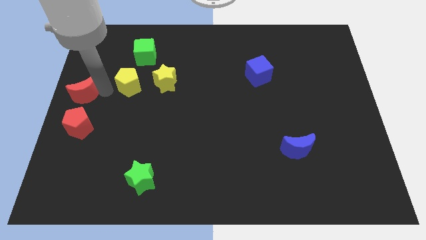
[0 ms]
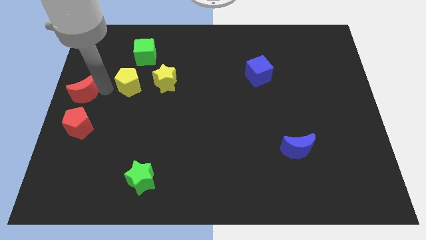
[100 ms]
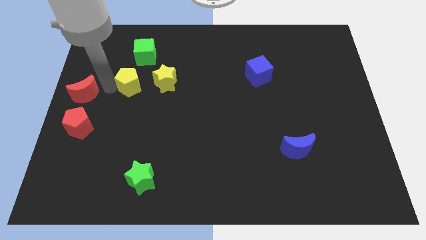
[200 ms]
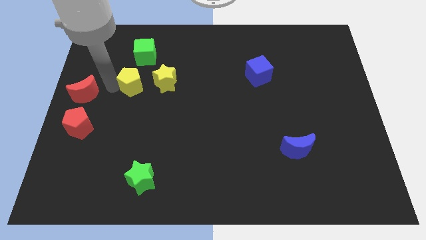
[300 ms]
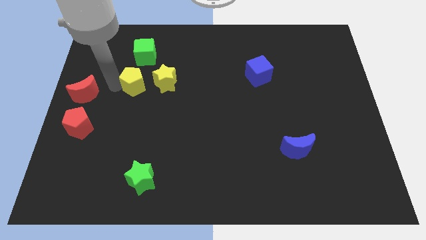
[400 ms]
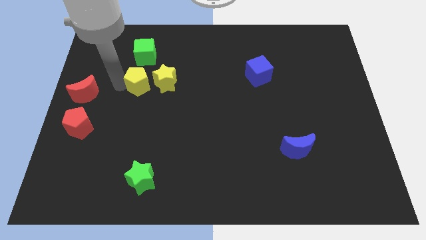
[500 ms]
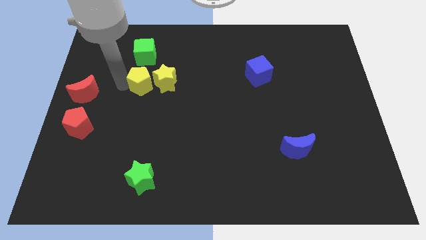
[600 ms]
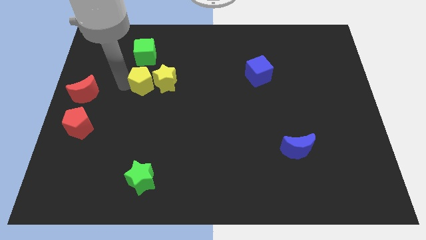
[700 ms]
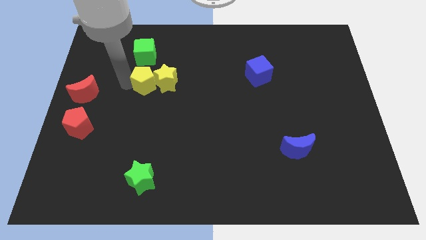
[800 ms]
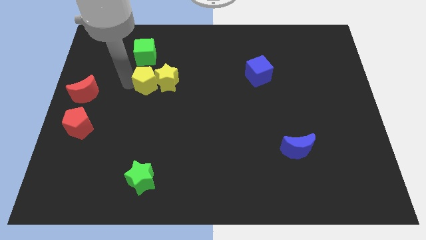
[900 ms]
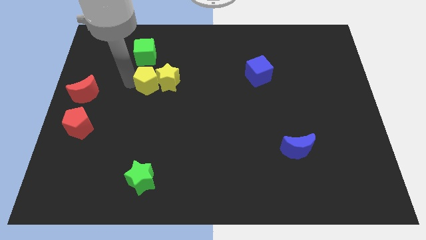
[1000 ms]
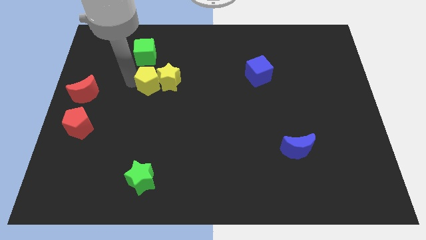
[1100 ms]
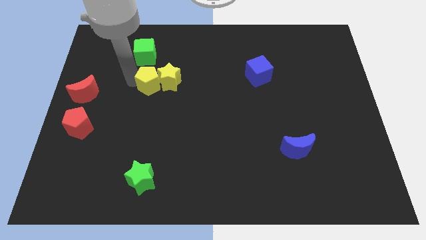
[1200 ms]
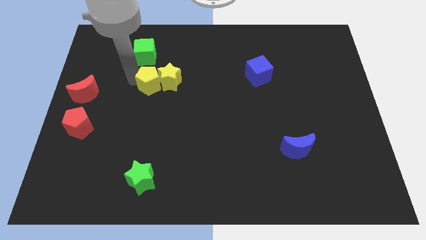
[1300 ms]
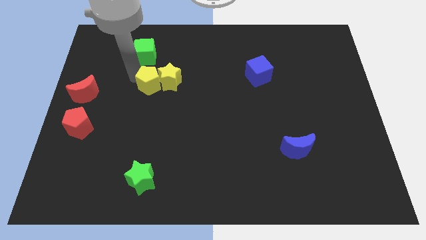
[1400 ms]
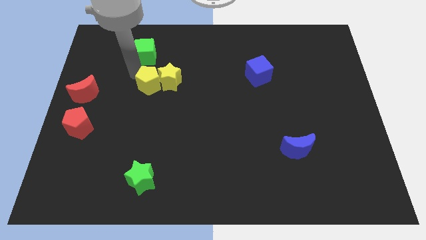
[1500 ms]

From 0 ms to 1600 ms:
push the yellow pentagon into the yellow star

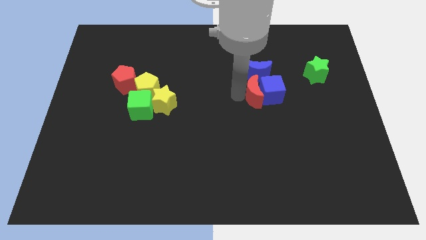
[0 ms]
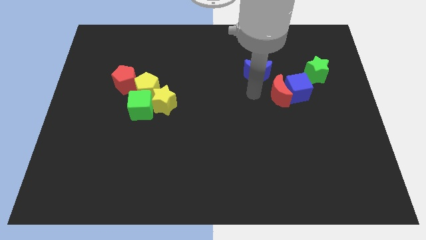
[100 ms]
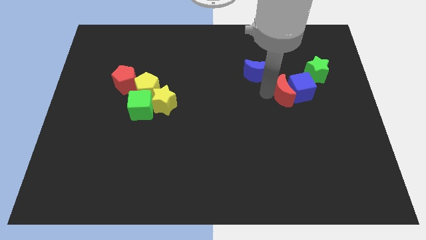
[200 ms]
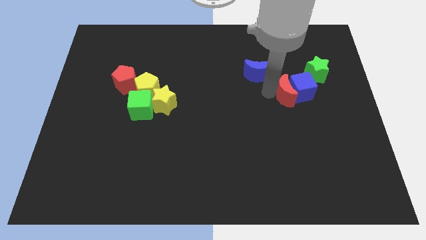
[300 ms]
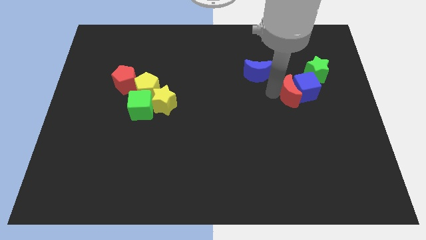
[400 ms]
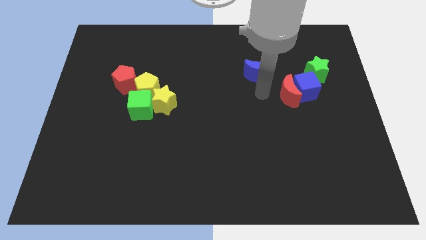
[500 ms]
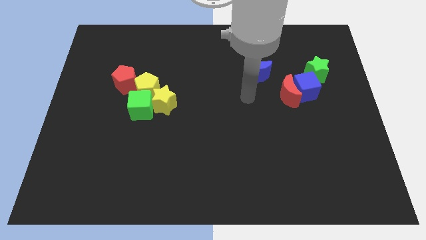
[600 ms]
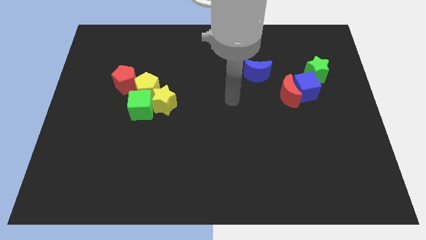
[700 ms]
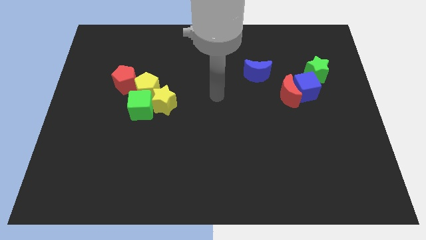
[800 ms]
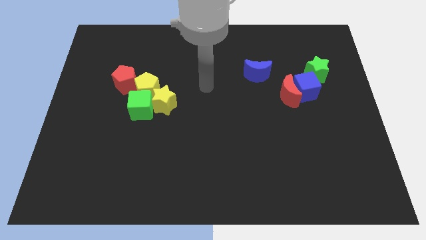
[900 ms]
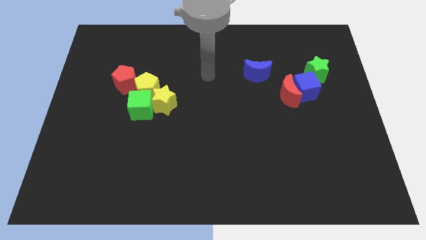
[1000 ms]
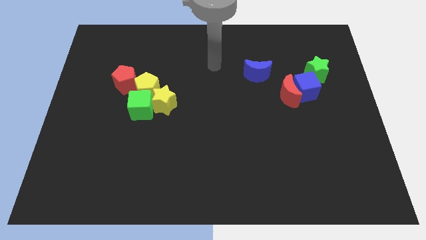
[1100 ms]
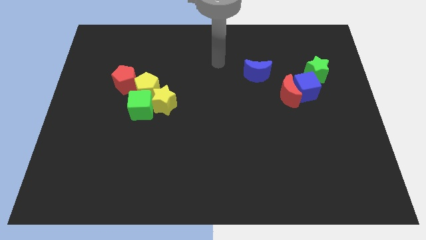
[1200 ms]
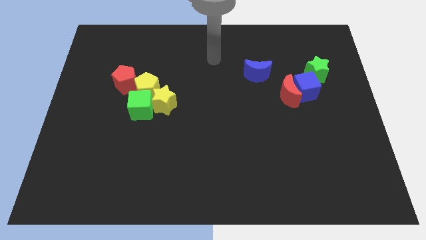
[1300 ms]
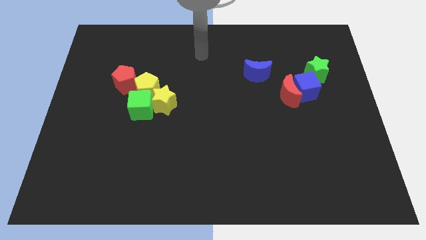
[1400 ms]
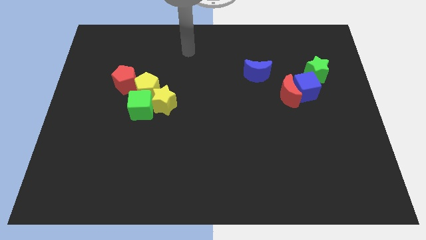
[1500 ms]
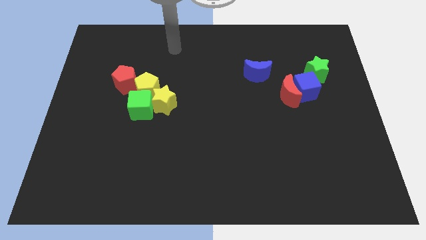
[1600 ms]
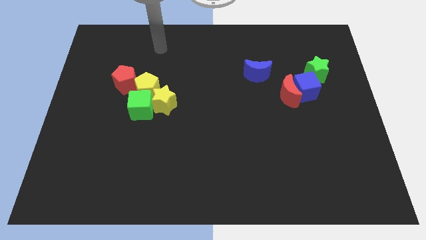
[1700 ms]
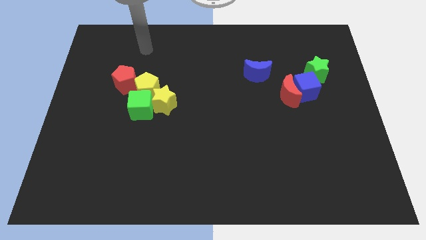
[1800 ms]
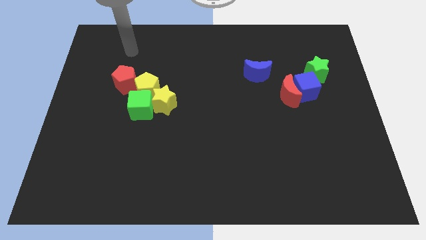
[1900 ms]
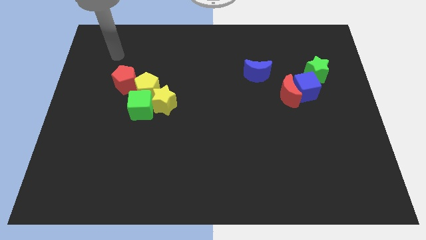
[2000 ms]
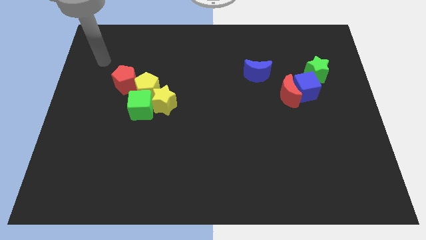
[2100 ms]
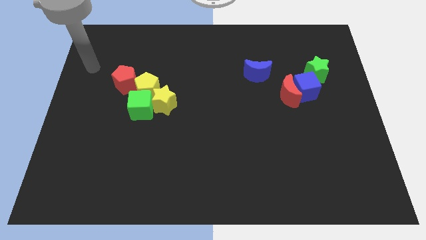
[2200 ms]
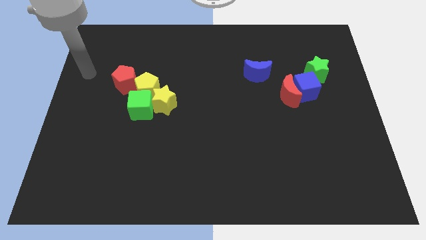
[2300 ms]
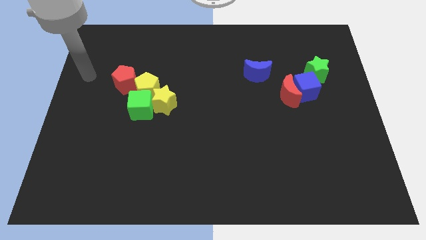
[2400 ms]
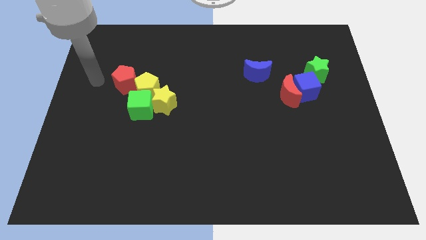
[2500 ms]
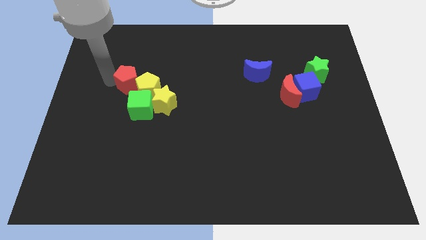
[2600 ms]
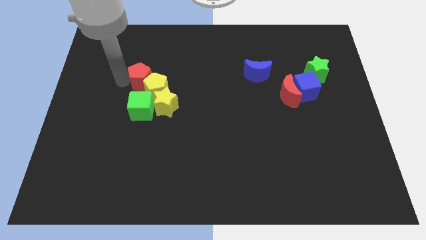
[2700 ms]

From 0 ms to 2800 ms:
go away from the red moon

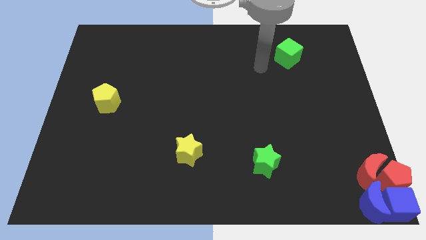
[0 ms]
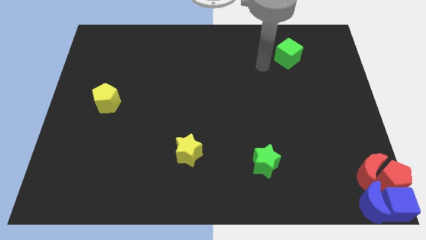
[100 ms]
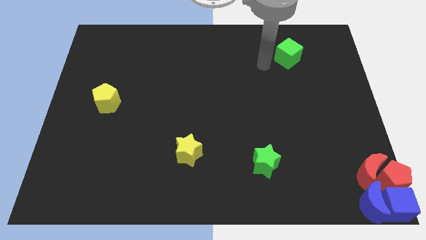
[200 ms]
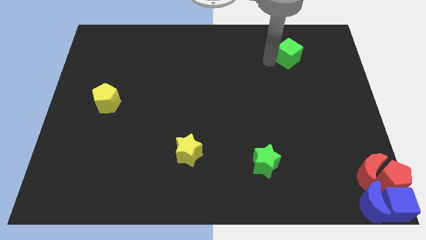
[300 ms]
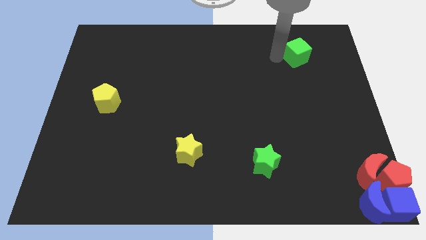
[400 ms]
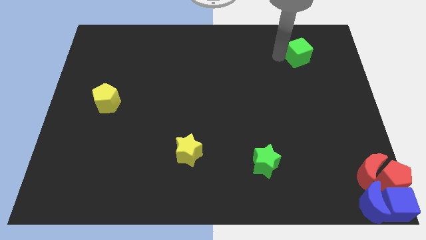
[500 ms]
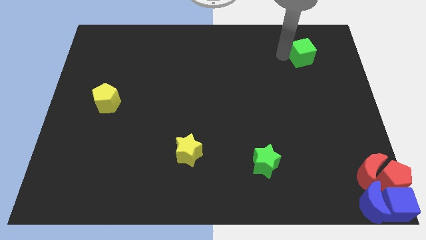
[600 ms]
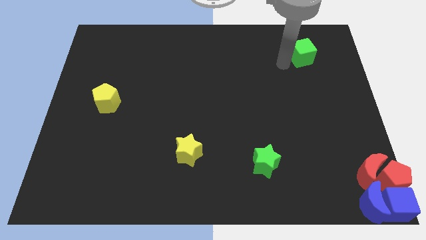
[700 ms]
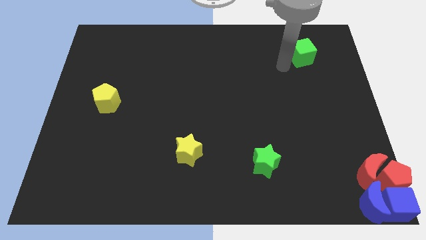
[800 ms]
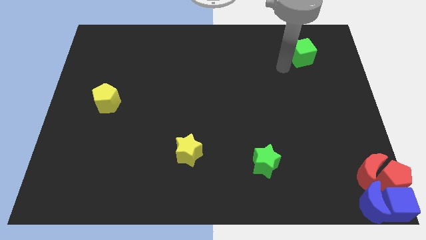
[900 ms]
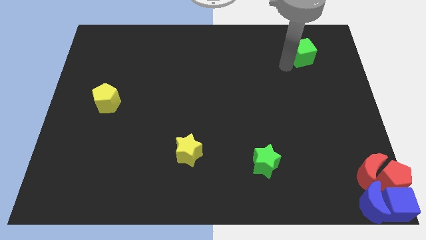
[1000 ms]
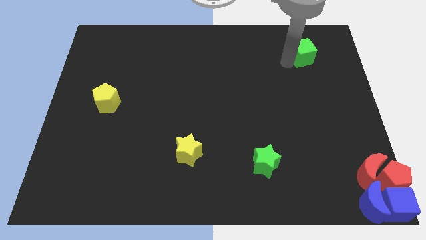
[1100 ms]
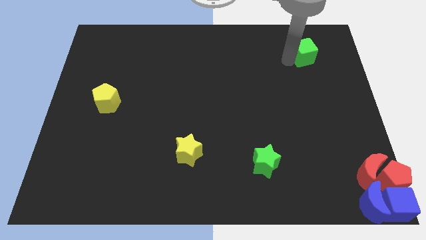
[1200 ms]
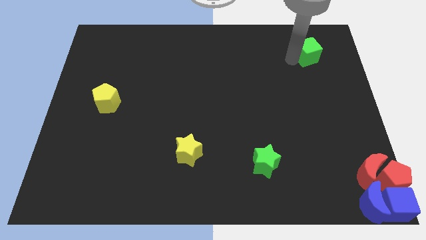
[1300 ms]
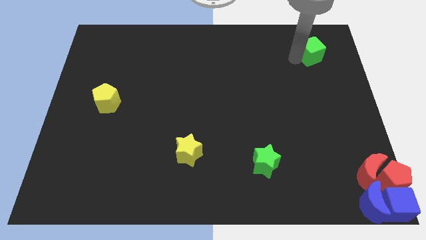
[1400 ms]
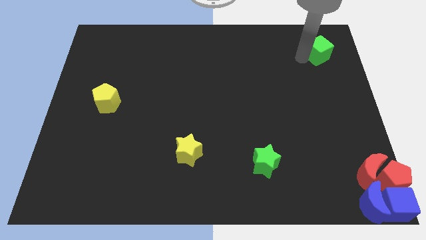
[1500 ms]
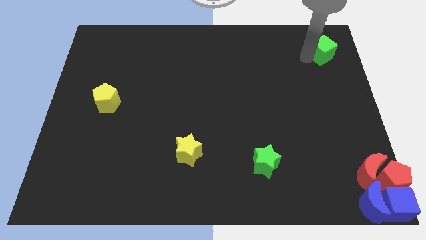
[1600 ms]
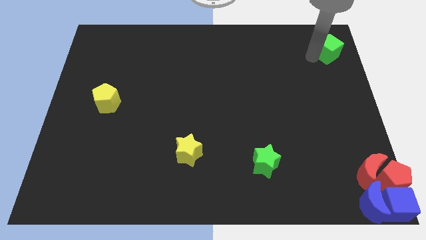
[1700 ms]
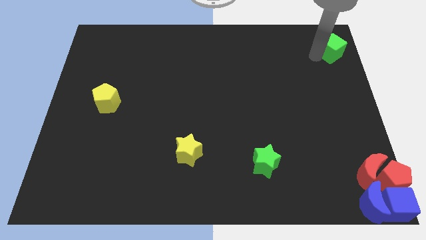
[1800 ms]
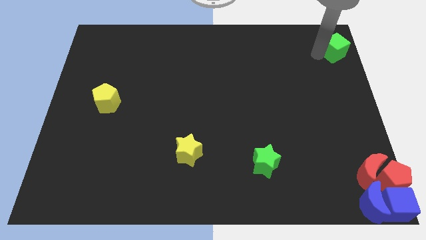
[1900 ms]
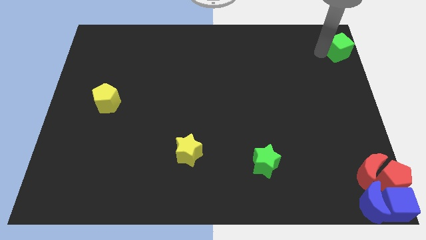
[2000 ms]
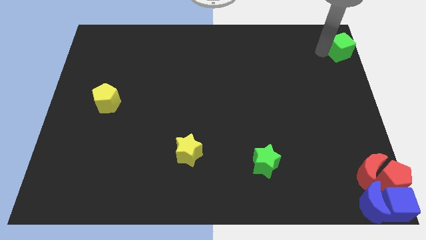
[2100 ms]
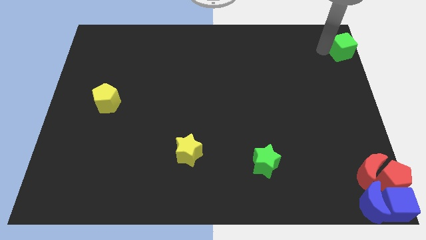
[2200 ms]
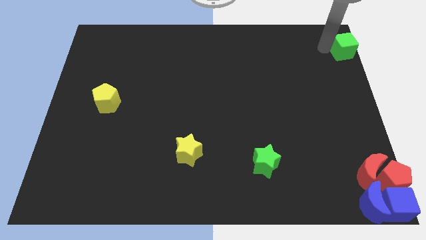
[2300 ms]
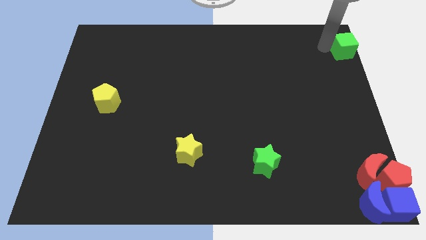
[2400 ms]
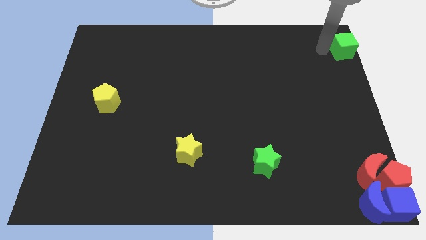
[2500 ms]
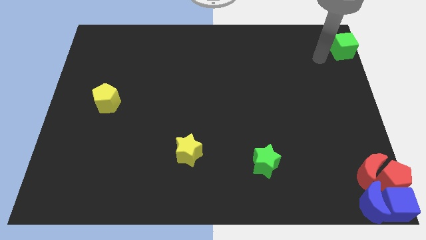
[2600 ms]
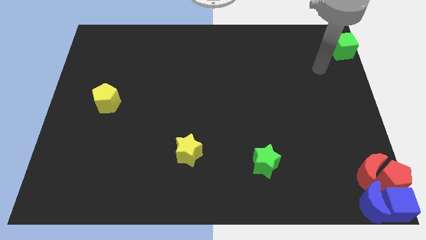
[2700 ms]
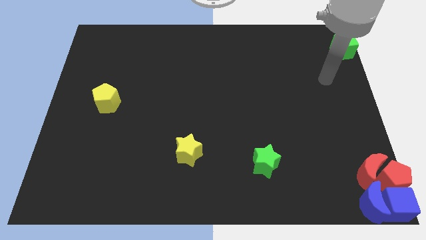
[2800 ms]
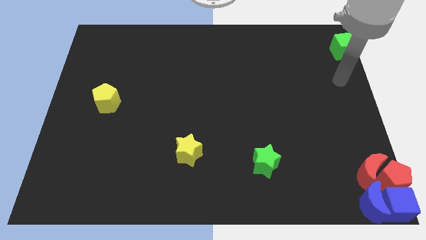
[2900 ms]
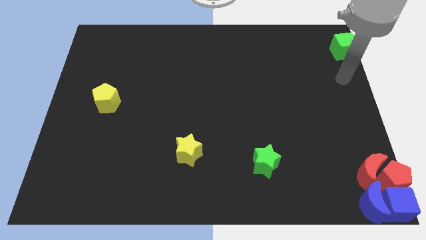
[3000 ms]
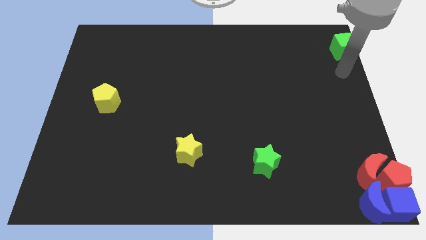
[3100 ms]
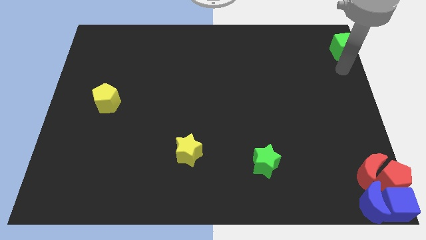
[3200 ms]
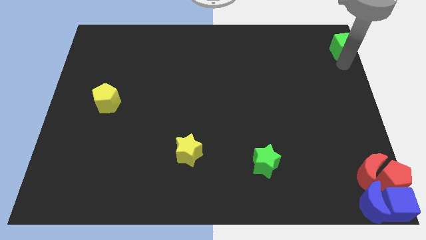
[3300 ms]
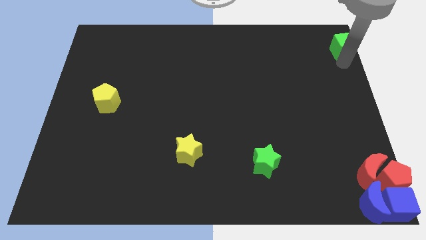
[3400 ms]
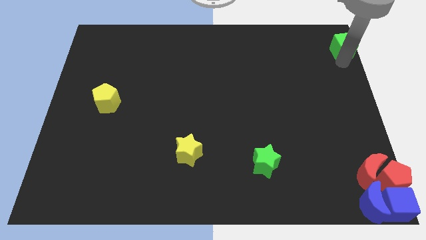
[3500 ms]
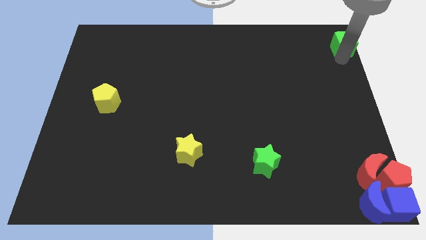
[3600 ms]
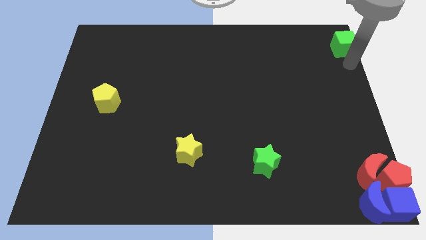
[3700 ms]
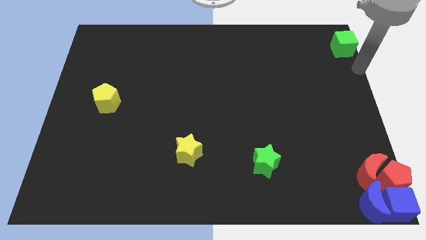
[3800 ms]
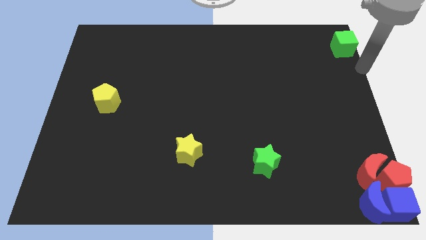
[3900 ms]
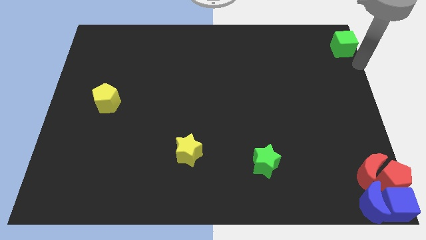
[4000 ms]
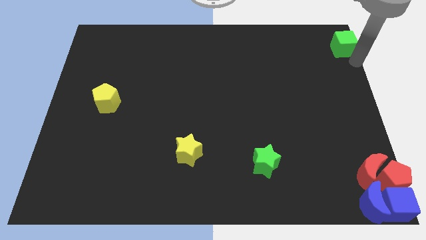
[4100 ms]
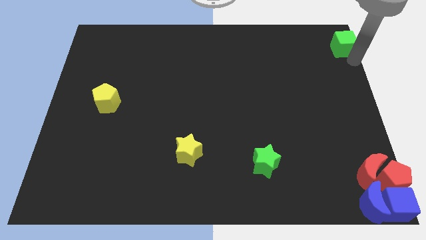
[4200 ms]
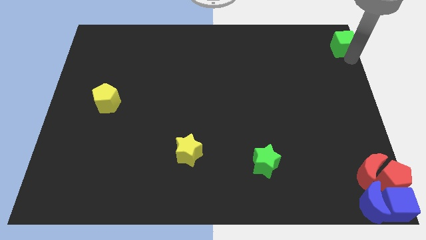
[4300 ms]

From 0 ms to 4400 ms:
move the green cube at the top right corner of the board

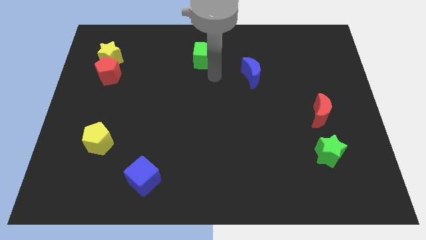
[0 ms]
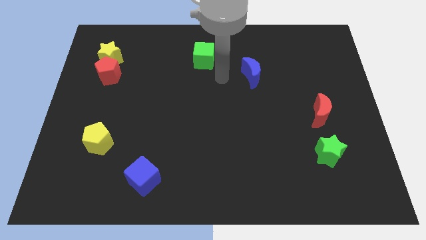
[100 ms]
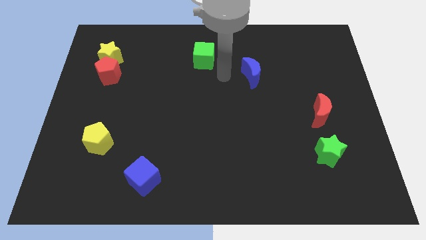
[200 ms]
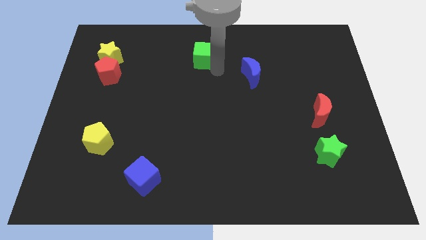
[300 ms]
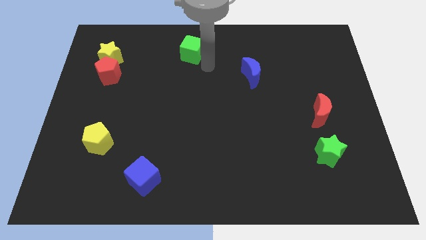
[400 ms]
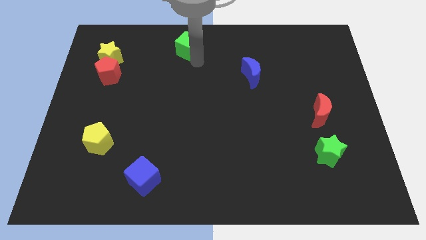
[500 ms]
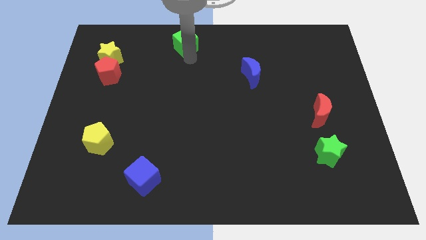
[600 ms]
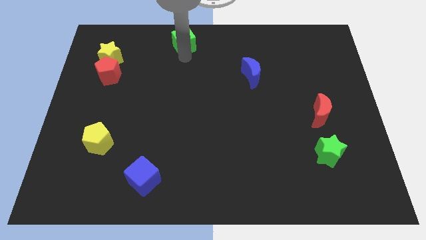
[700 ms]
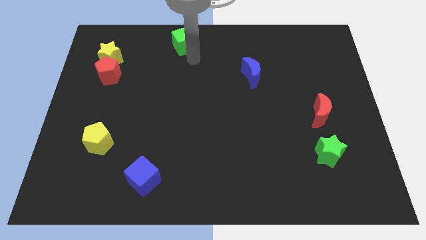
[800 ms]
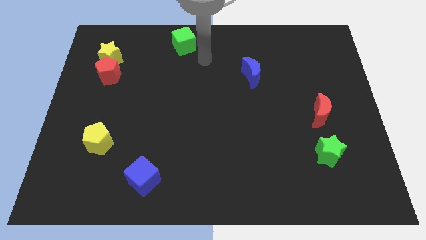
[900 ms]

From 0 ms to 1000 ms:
move the green cube slightly to the top side
